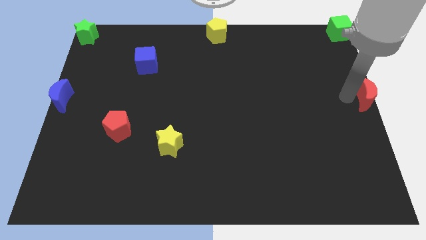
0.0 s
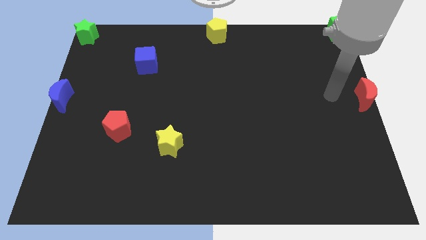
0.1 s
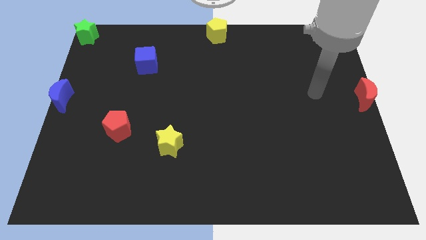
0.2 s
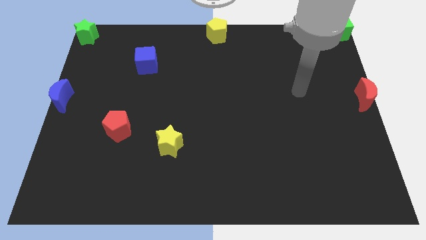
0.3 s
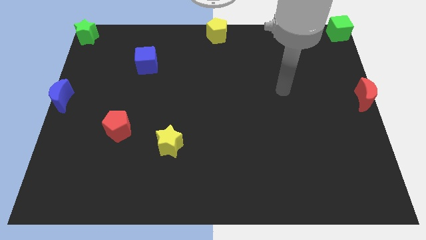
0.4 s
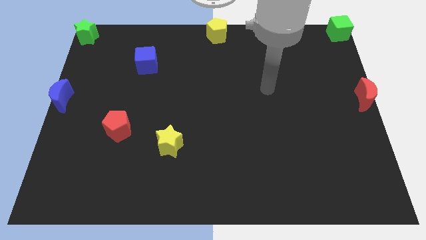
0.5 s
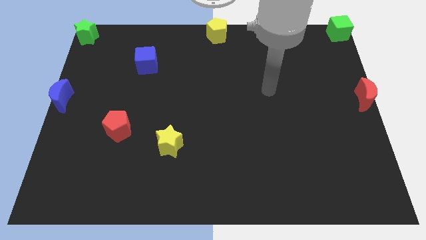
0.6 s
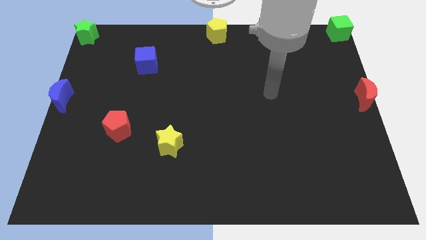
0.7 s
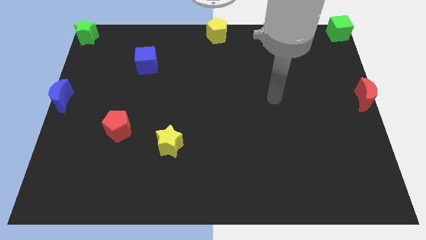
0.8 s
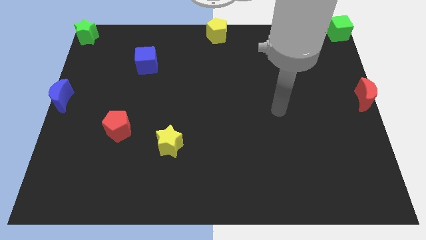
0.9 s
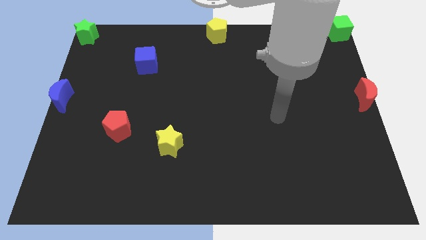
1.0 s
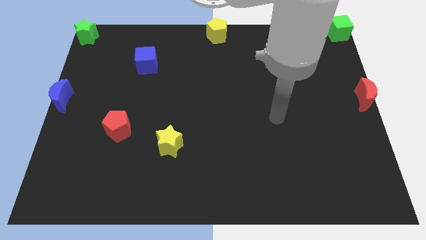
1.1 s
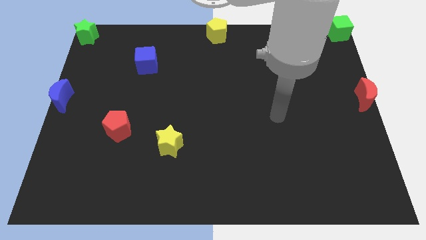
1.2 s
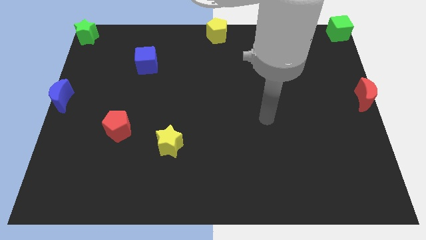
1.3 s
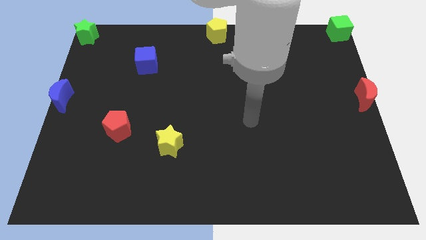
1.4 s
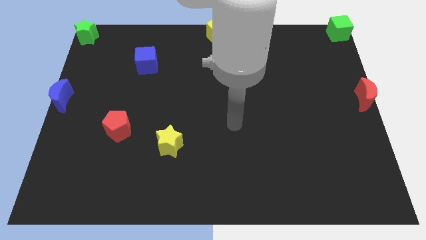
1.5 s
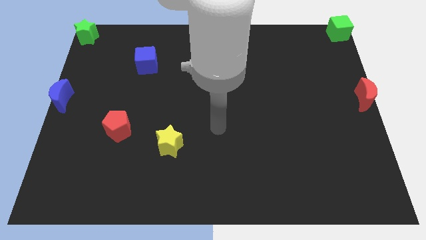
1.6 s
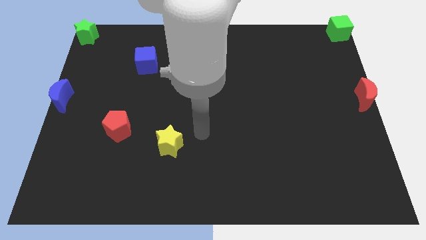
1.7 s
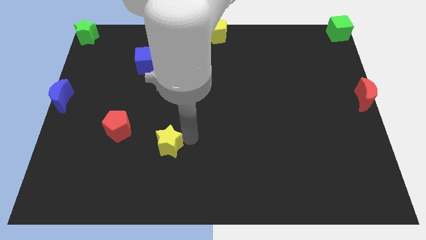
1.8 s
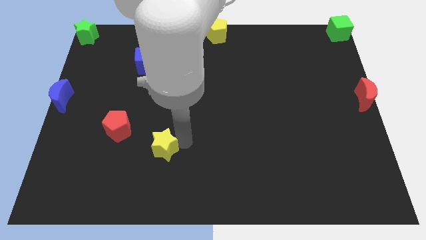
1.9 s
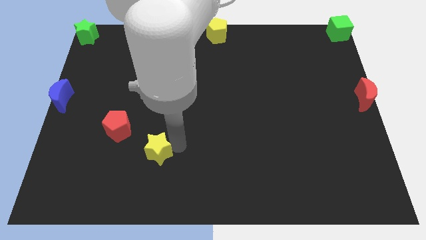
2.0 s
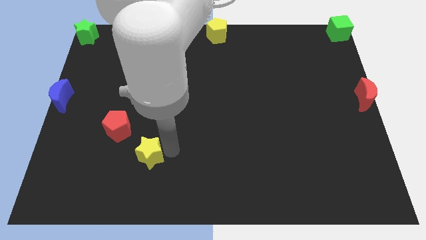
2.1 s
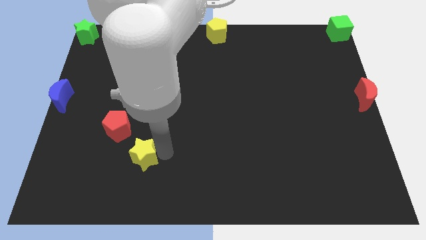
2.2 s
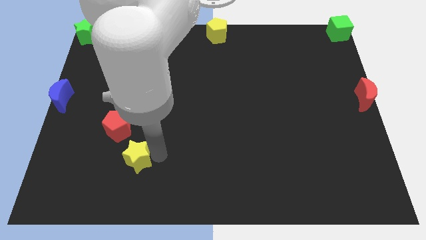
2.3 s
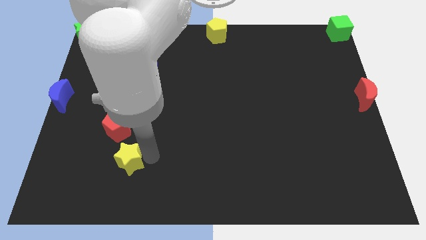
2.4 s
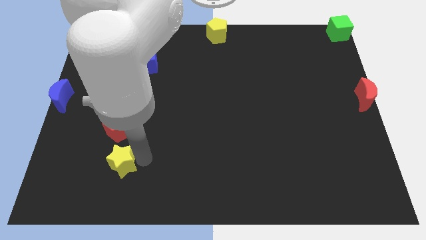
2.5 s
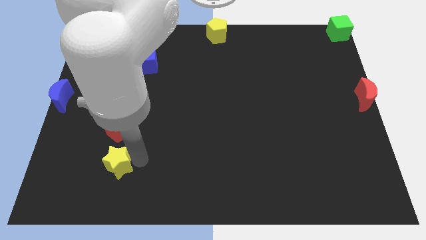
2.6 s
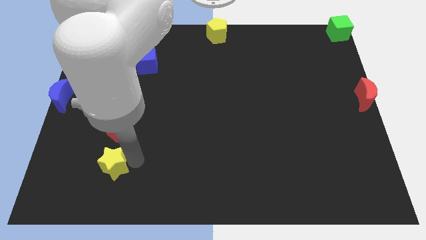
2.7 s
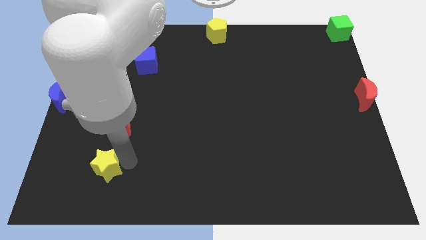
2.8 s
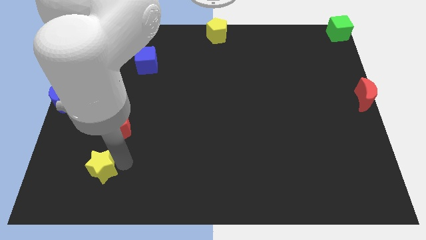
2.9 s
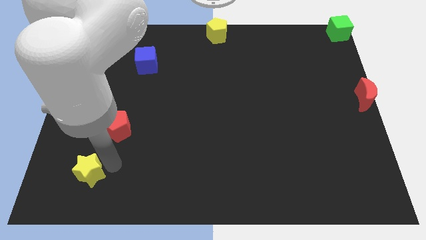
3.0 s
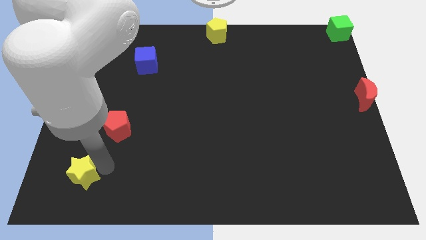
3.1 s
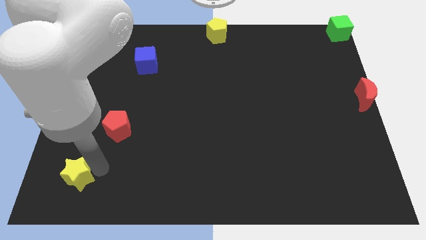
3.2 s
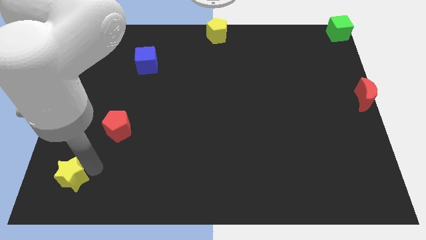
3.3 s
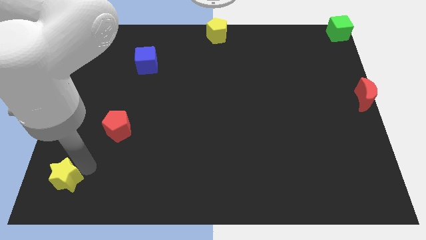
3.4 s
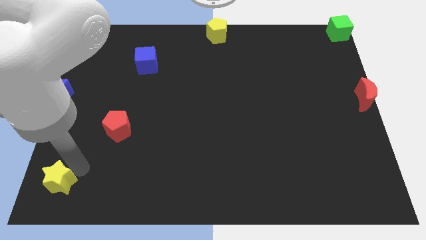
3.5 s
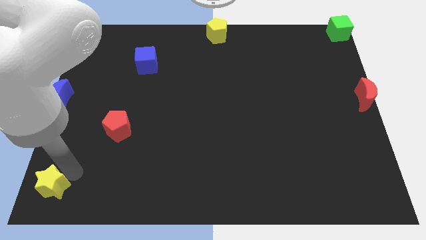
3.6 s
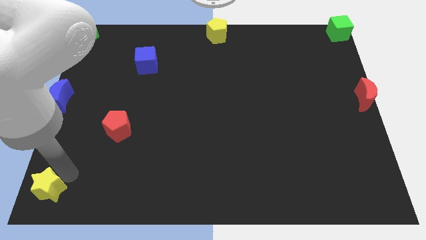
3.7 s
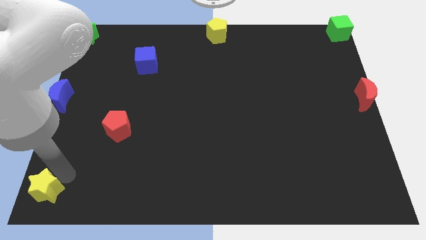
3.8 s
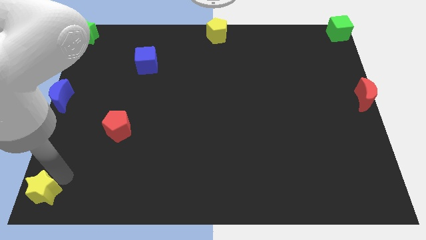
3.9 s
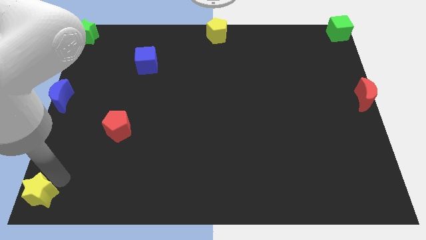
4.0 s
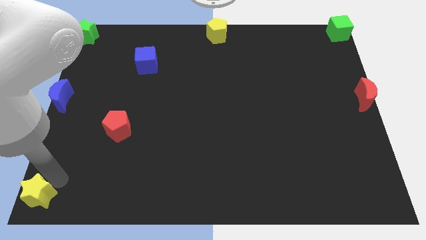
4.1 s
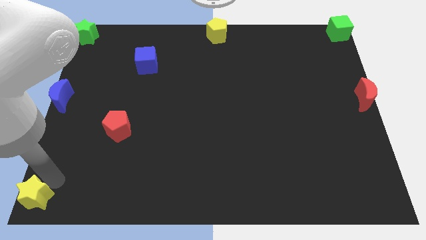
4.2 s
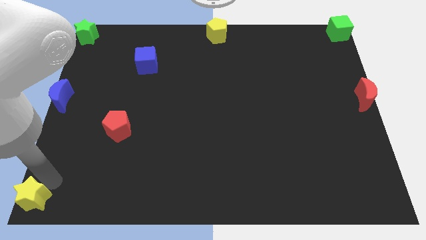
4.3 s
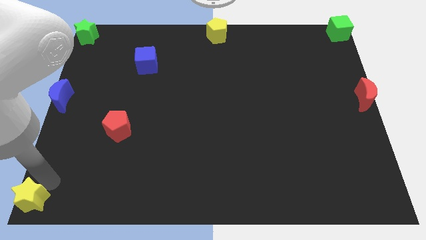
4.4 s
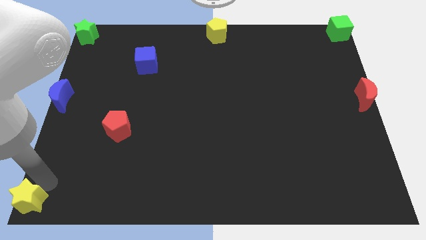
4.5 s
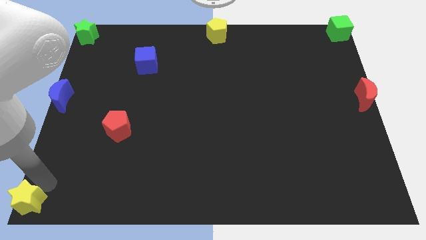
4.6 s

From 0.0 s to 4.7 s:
place the yellow star at the bottom left corner of the board

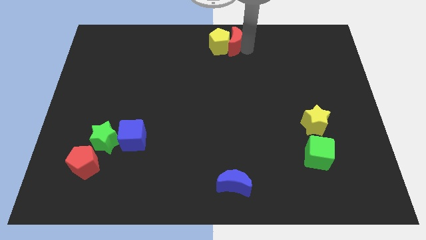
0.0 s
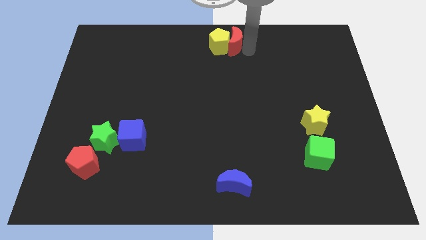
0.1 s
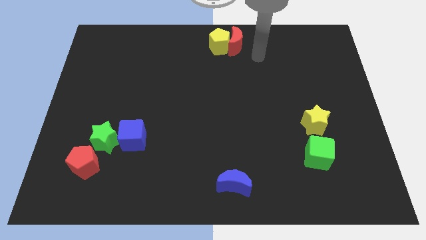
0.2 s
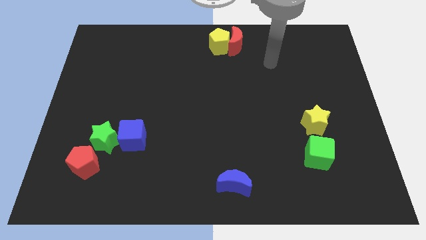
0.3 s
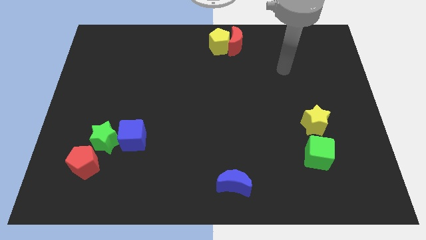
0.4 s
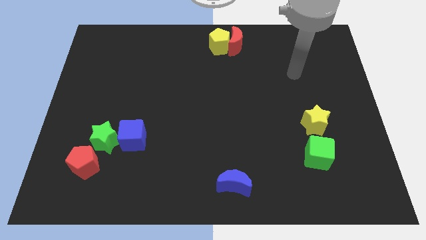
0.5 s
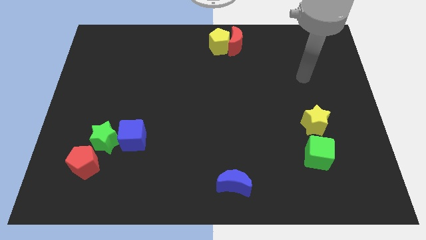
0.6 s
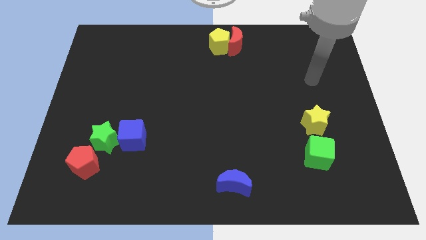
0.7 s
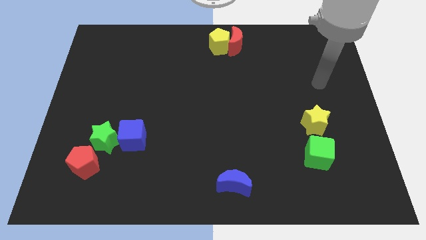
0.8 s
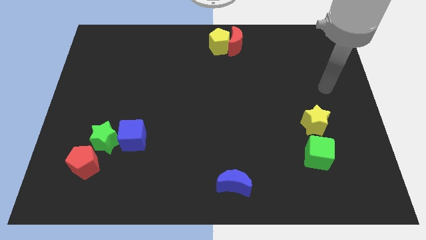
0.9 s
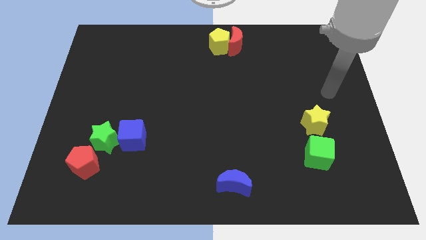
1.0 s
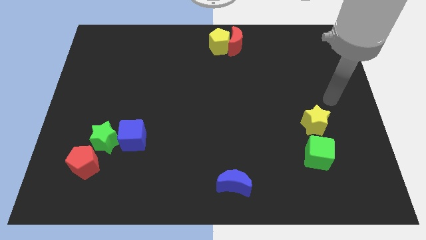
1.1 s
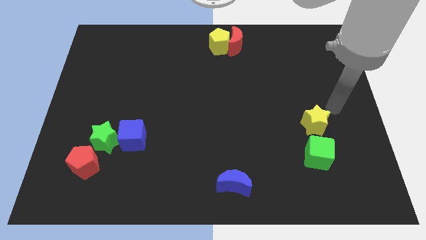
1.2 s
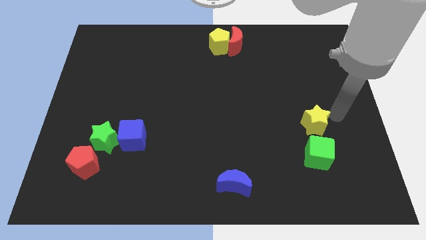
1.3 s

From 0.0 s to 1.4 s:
go away from the red moon

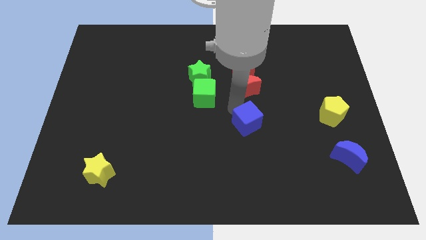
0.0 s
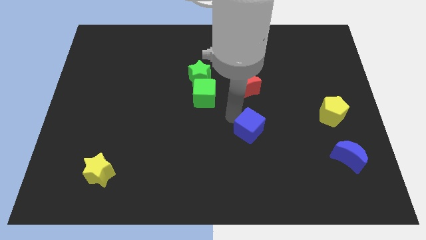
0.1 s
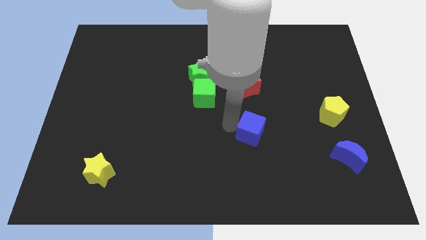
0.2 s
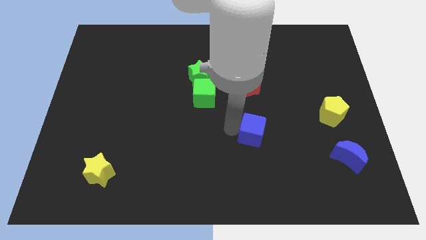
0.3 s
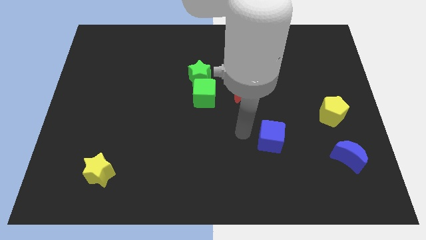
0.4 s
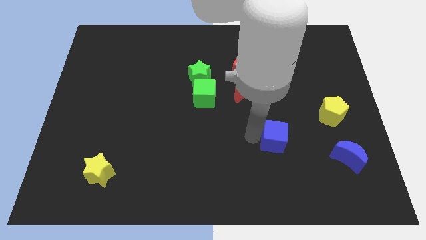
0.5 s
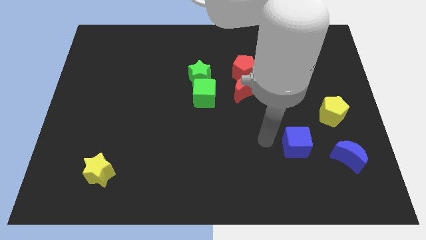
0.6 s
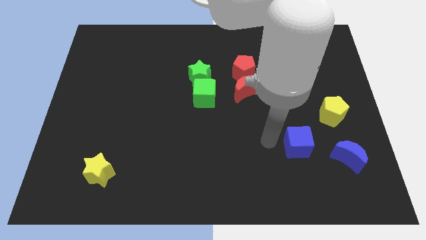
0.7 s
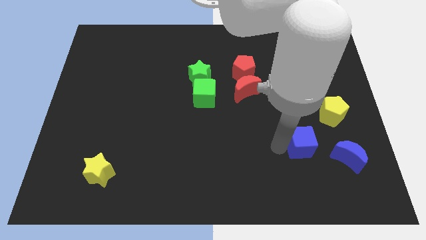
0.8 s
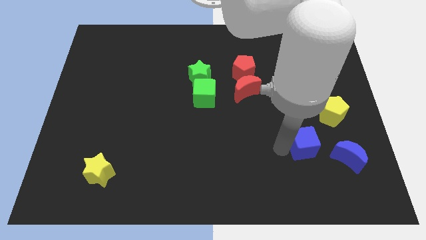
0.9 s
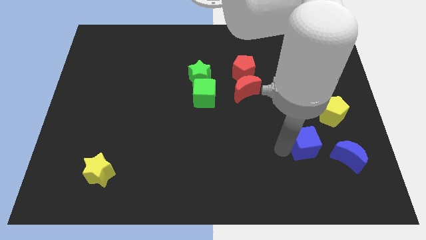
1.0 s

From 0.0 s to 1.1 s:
move the blue cube towards blue crescent

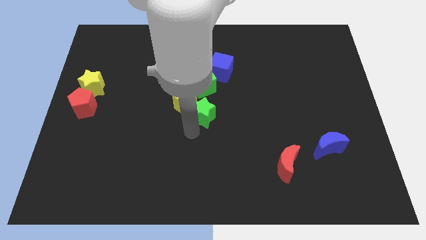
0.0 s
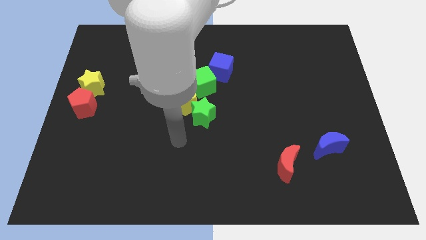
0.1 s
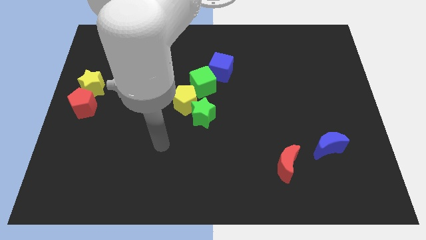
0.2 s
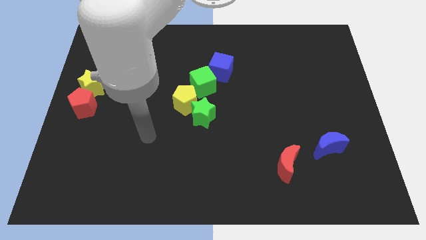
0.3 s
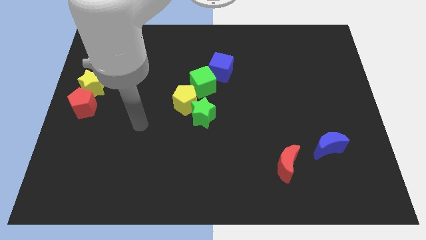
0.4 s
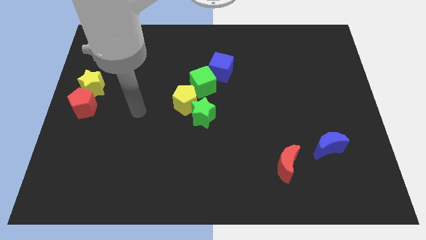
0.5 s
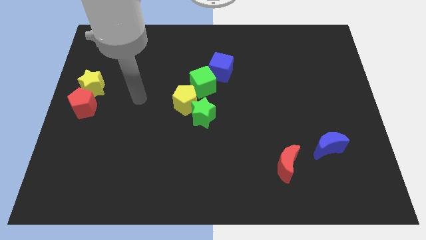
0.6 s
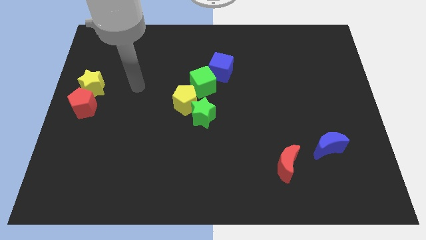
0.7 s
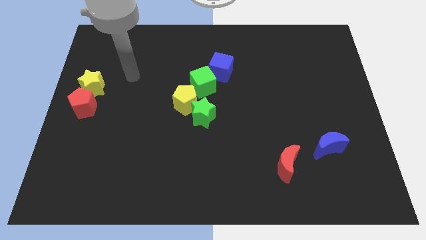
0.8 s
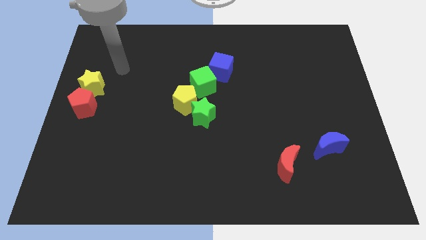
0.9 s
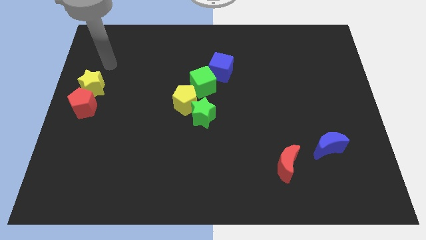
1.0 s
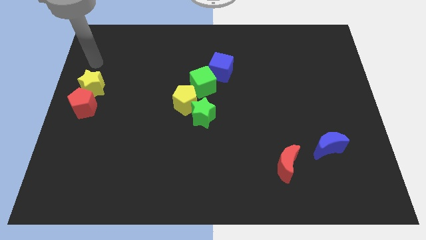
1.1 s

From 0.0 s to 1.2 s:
place your arm at the top of yellow star

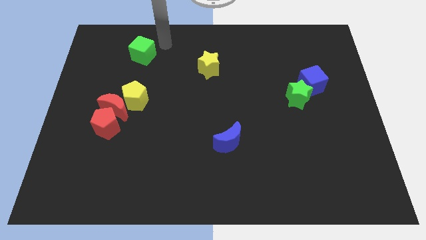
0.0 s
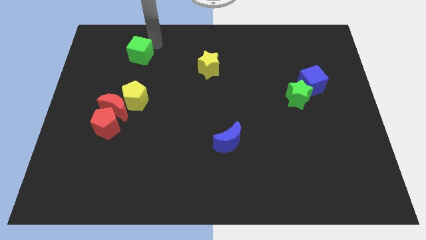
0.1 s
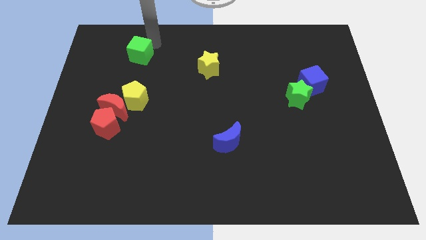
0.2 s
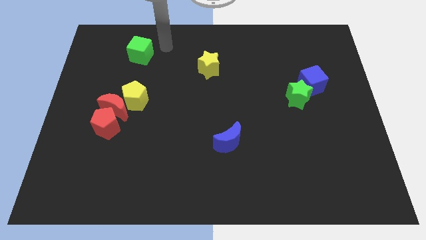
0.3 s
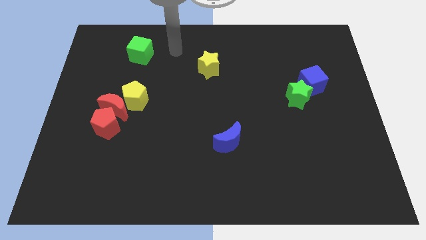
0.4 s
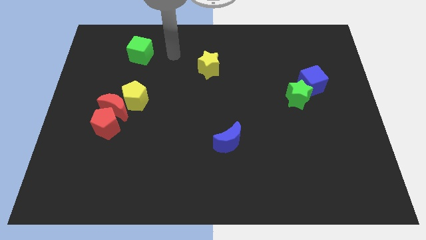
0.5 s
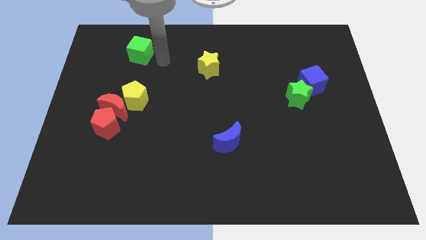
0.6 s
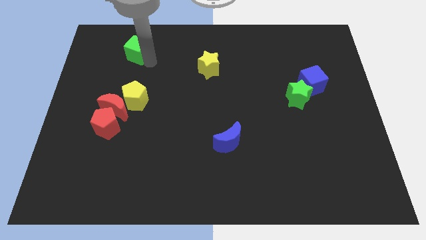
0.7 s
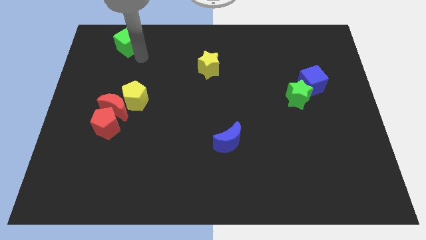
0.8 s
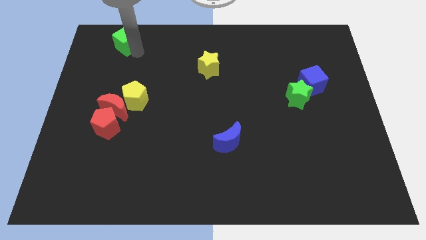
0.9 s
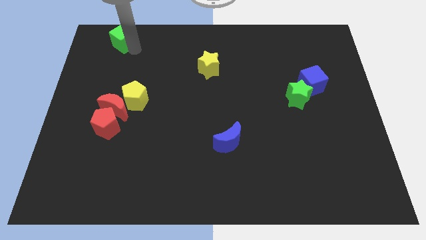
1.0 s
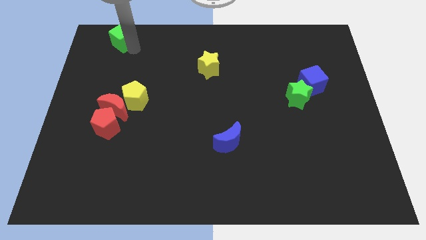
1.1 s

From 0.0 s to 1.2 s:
move the green cube to the top left of the board
